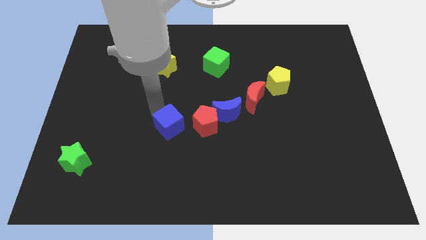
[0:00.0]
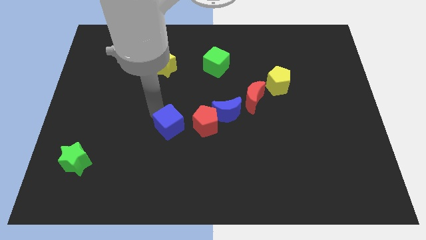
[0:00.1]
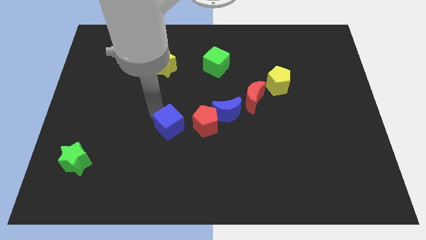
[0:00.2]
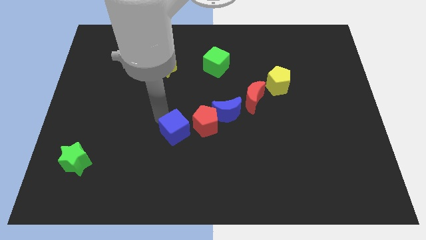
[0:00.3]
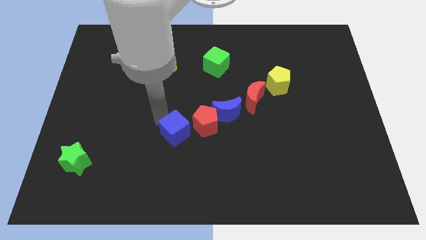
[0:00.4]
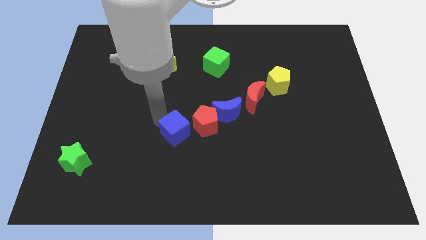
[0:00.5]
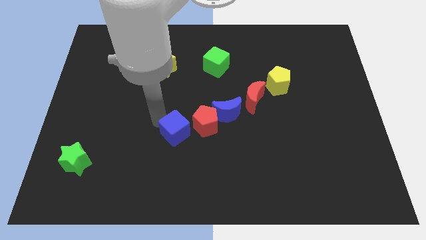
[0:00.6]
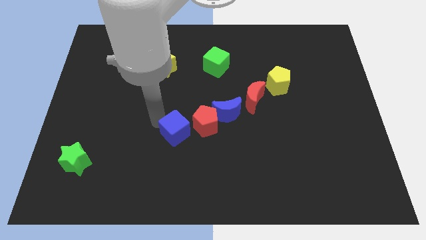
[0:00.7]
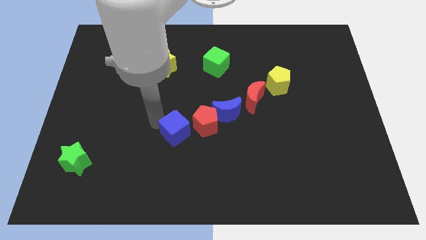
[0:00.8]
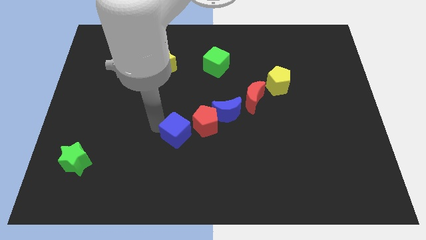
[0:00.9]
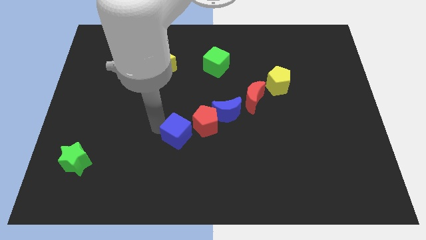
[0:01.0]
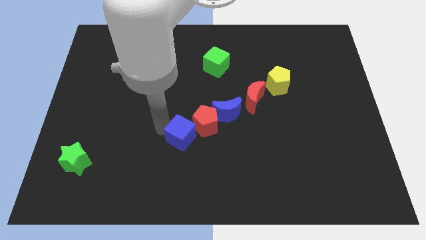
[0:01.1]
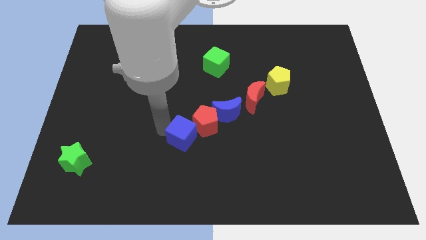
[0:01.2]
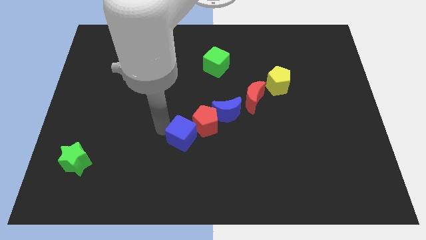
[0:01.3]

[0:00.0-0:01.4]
move the blue cube close to the red pentagon

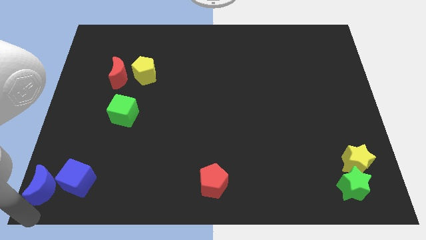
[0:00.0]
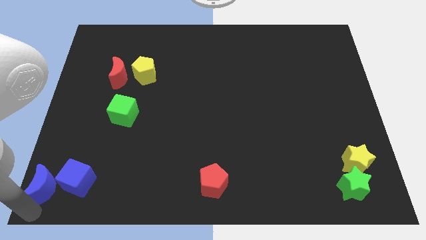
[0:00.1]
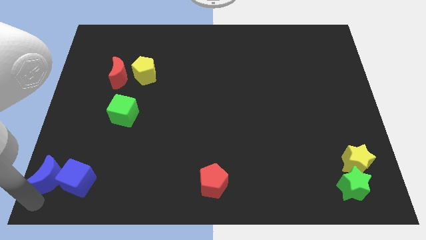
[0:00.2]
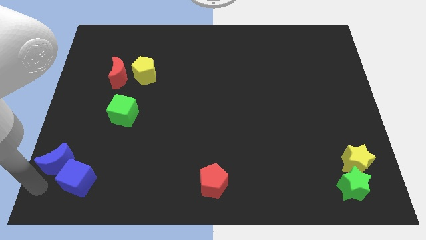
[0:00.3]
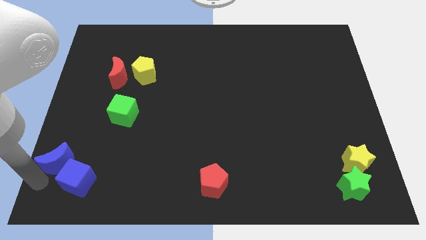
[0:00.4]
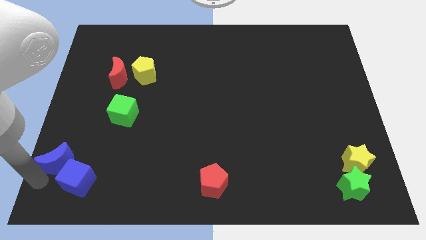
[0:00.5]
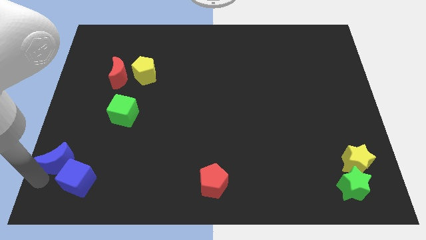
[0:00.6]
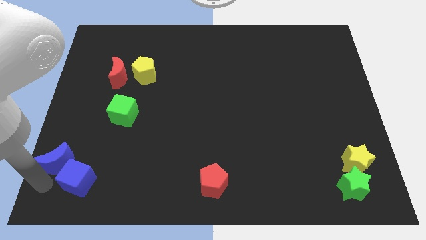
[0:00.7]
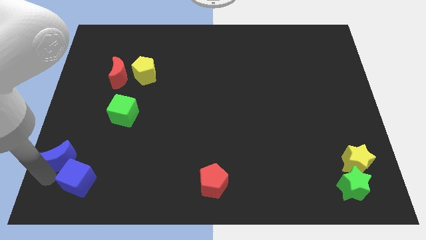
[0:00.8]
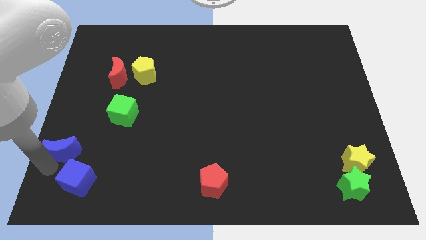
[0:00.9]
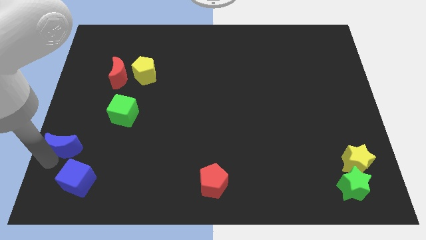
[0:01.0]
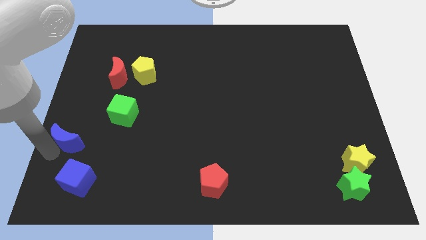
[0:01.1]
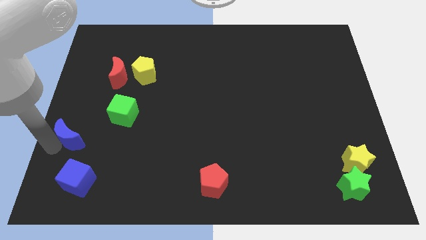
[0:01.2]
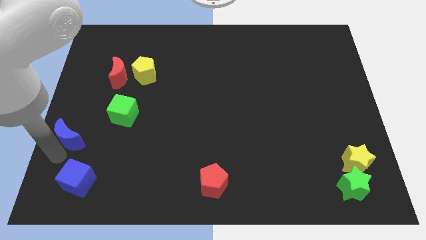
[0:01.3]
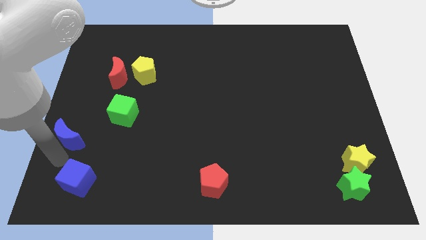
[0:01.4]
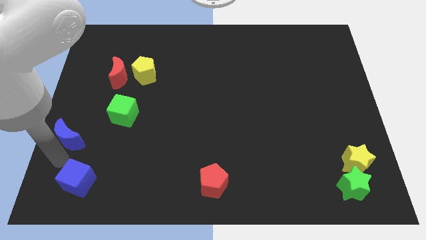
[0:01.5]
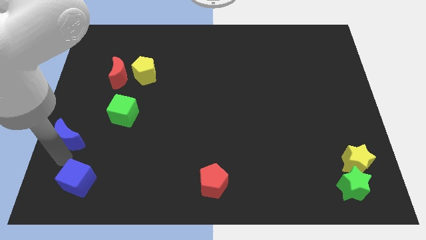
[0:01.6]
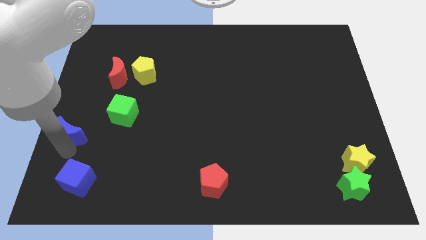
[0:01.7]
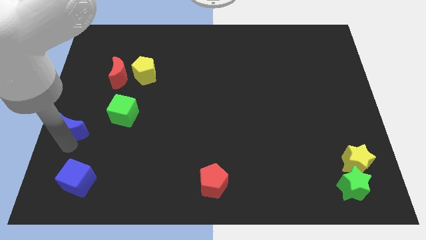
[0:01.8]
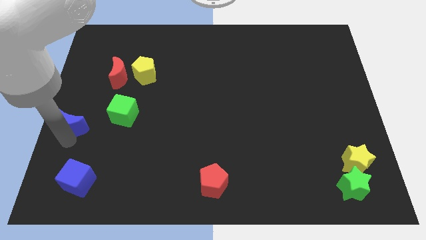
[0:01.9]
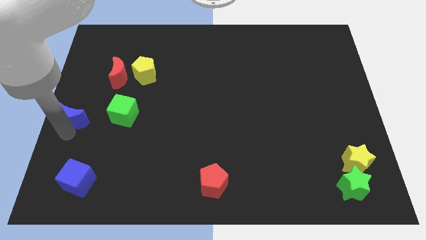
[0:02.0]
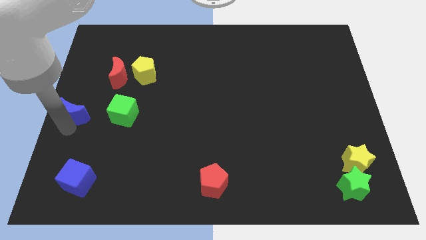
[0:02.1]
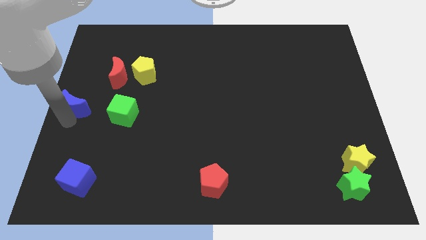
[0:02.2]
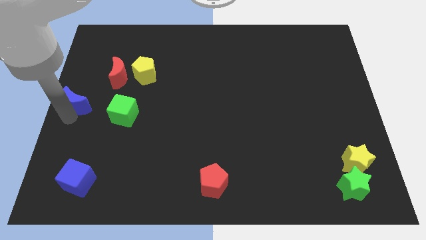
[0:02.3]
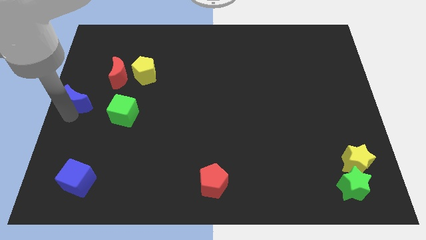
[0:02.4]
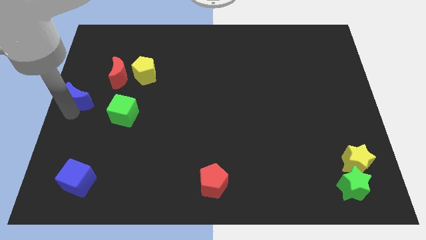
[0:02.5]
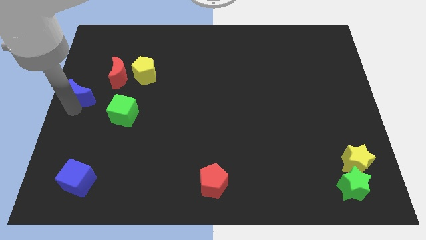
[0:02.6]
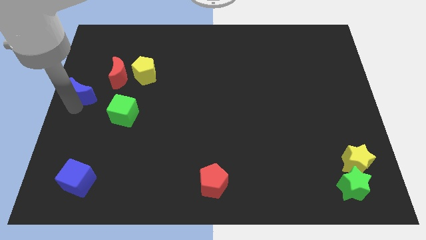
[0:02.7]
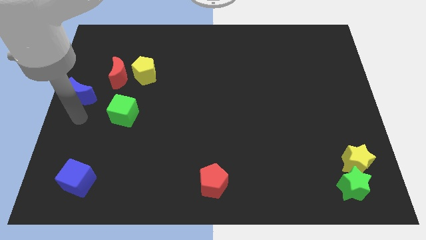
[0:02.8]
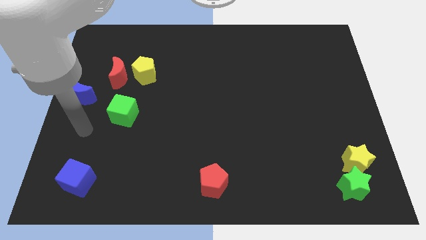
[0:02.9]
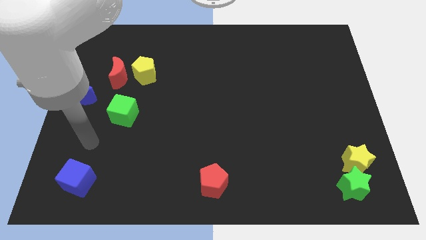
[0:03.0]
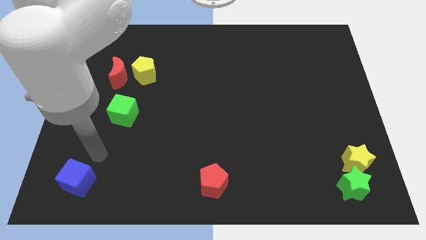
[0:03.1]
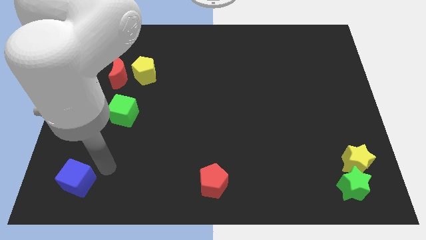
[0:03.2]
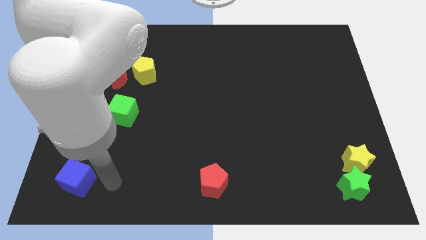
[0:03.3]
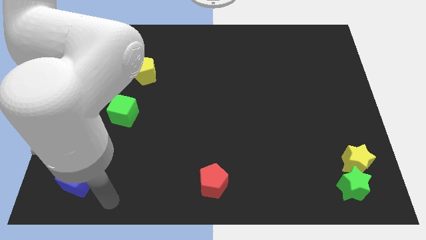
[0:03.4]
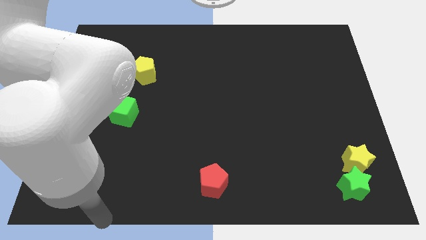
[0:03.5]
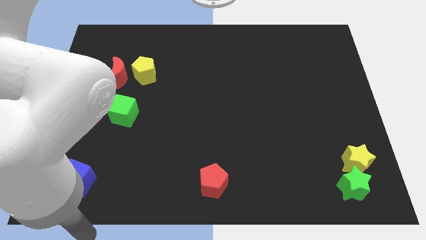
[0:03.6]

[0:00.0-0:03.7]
move the blue crescent upwards to the left to the red crescent

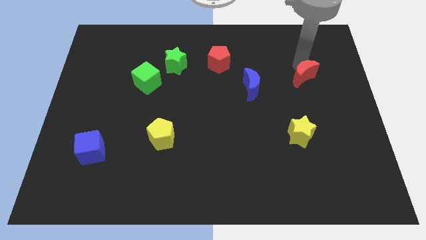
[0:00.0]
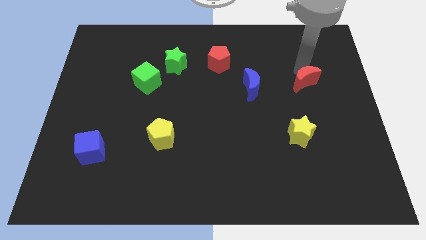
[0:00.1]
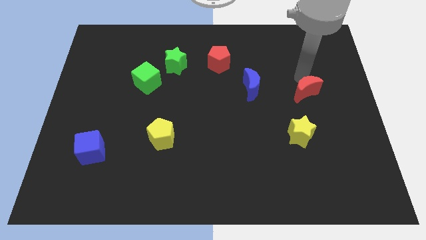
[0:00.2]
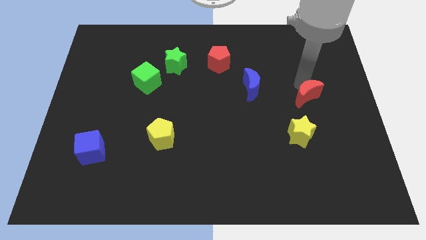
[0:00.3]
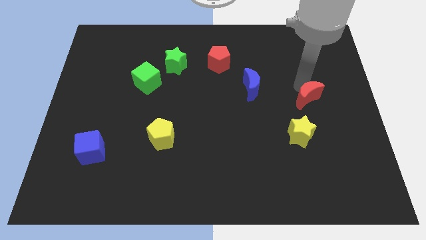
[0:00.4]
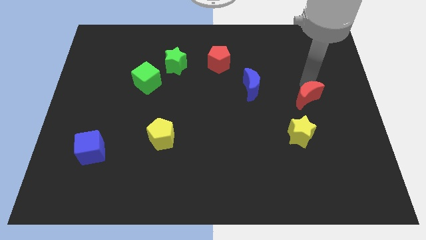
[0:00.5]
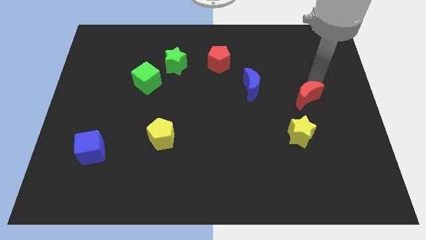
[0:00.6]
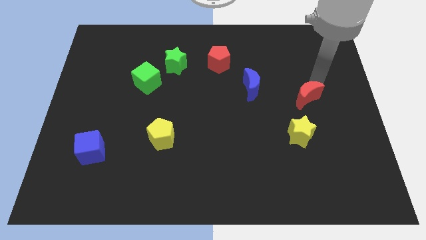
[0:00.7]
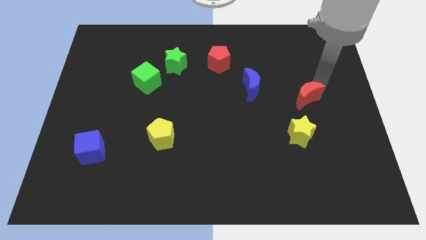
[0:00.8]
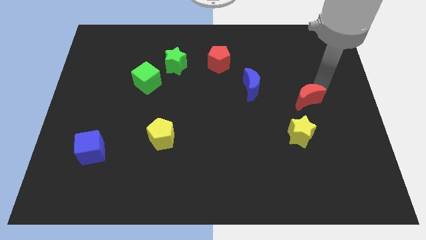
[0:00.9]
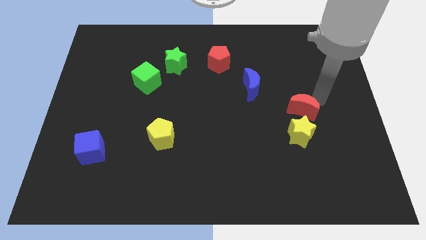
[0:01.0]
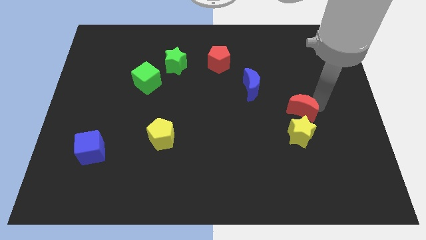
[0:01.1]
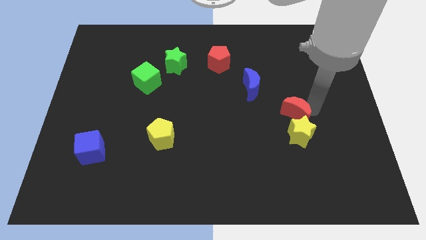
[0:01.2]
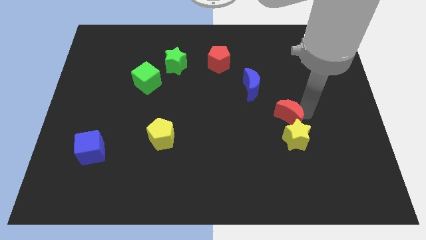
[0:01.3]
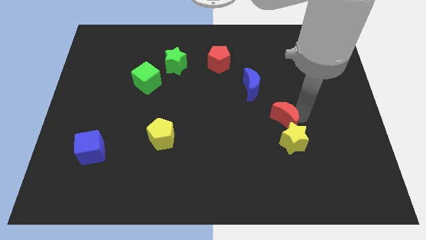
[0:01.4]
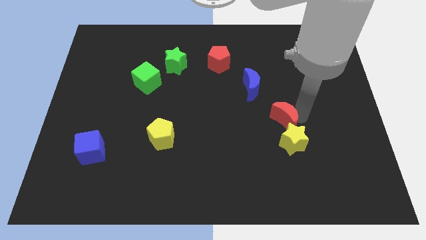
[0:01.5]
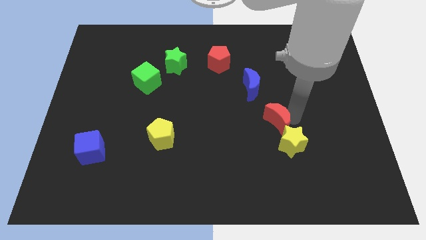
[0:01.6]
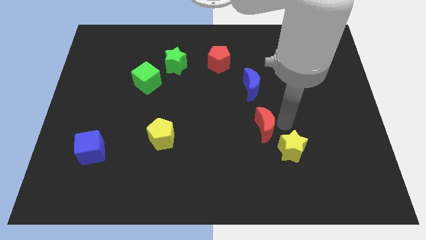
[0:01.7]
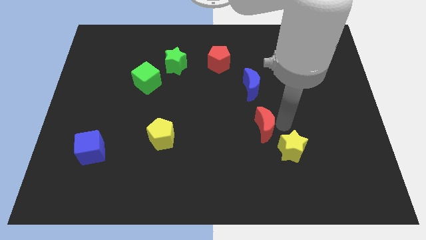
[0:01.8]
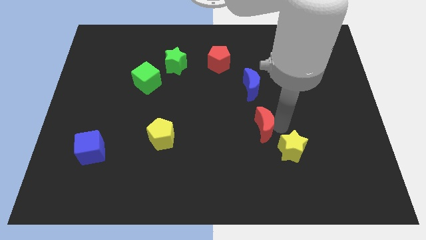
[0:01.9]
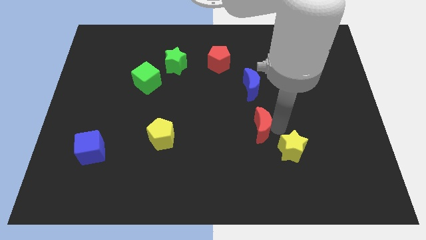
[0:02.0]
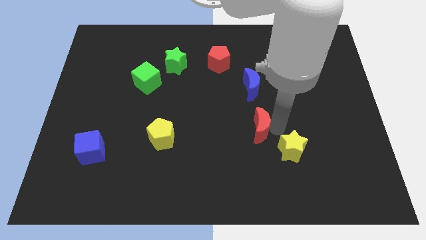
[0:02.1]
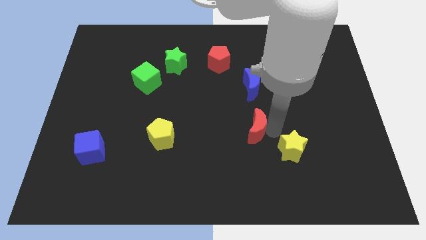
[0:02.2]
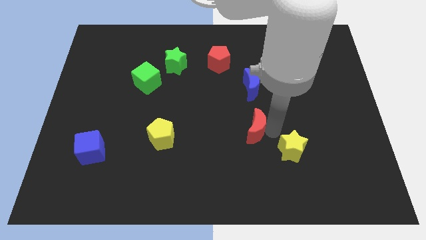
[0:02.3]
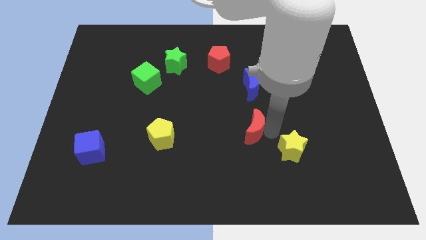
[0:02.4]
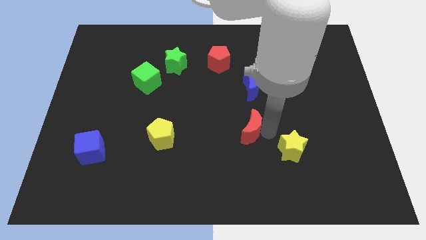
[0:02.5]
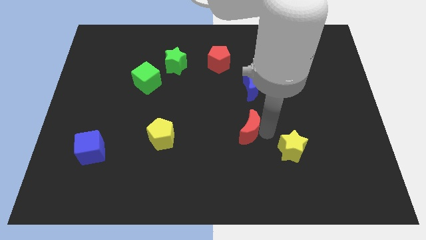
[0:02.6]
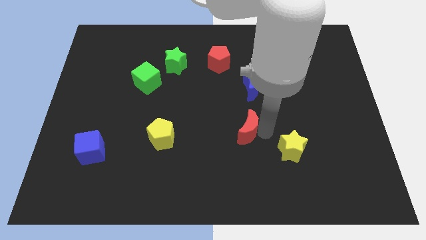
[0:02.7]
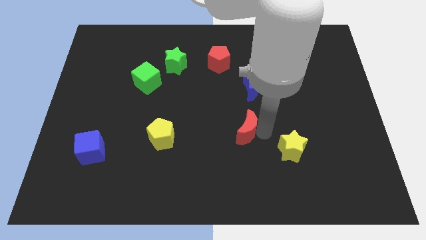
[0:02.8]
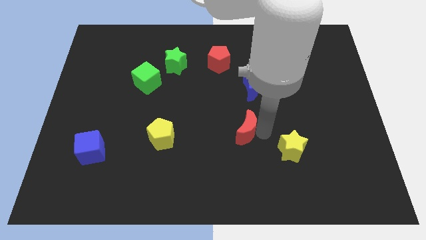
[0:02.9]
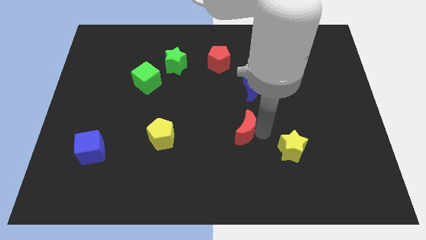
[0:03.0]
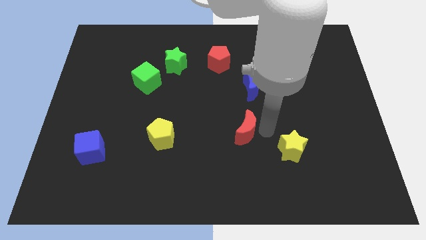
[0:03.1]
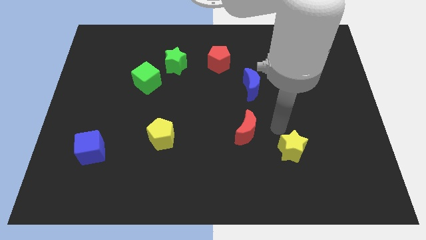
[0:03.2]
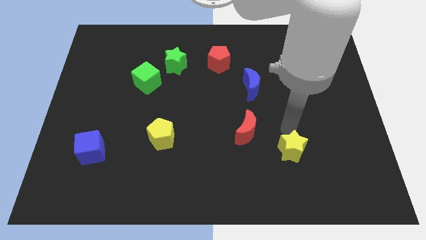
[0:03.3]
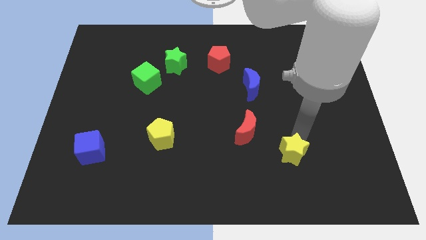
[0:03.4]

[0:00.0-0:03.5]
place red moon below blue moon

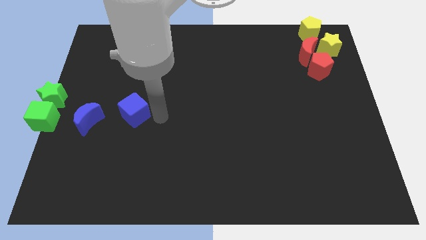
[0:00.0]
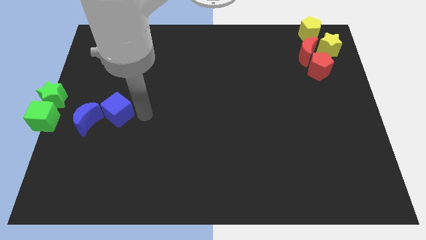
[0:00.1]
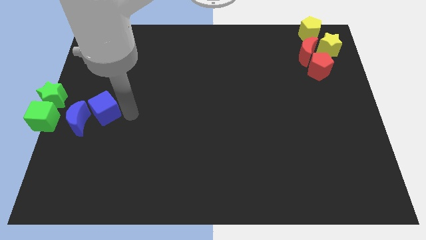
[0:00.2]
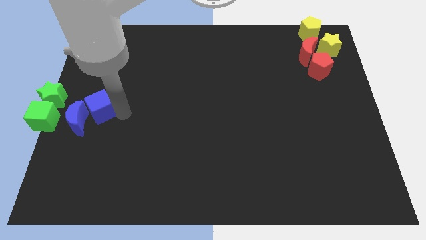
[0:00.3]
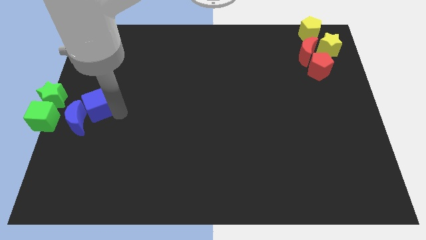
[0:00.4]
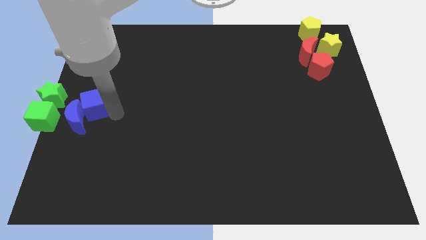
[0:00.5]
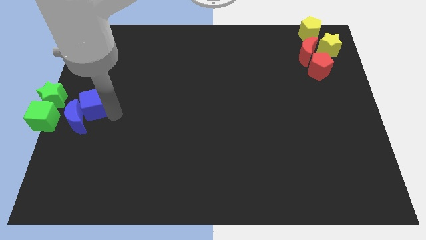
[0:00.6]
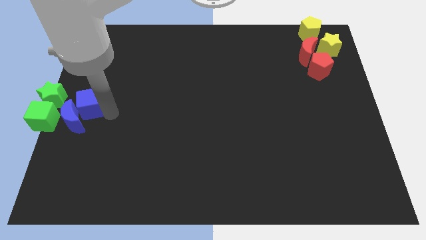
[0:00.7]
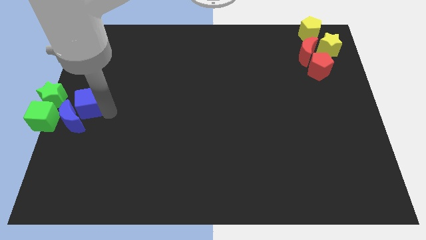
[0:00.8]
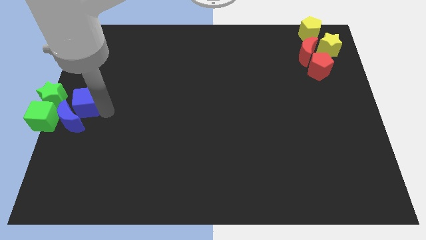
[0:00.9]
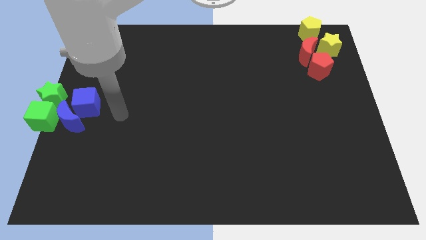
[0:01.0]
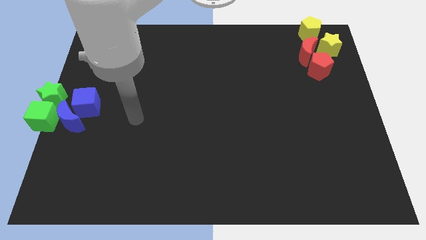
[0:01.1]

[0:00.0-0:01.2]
move your arm on the right side of the blue blocks
